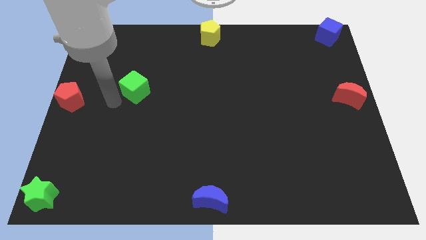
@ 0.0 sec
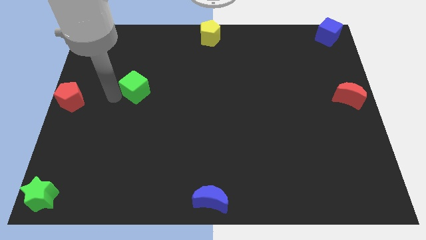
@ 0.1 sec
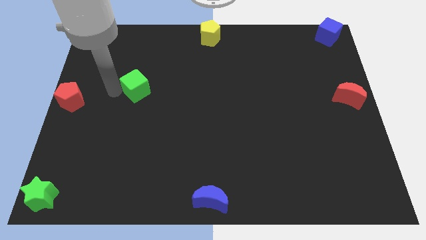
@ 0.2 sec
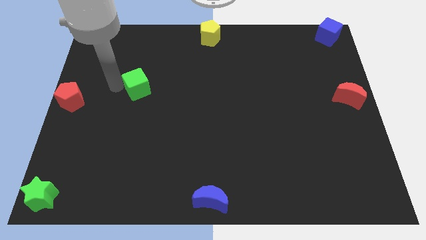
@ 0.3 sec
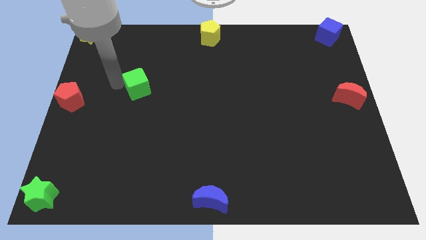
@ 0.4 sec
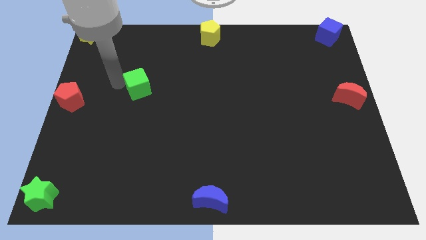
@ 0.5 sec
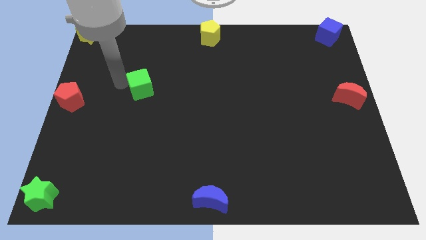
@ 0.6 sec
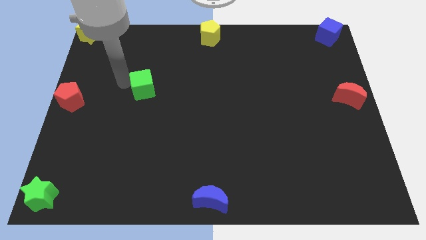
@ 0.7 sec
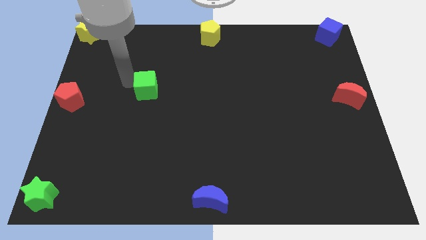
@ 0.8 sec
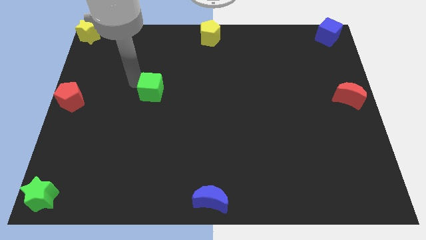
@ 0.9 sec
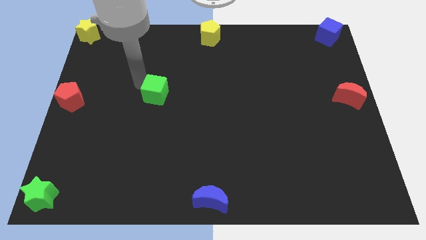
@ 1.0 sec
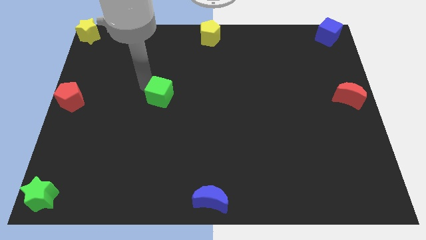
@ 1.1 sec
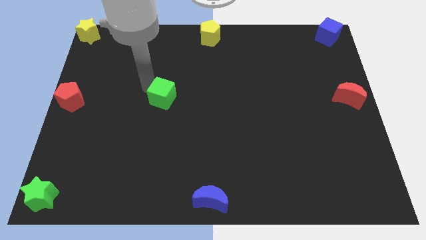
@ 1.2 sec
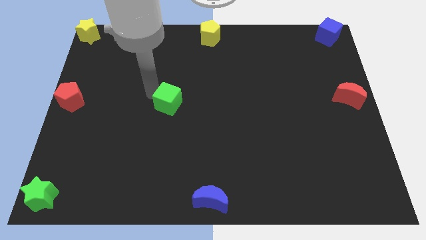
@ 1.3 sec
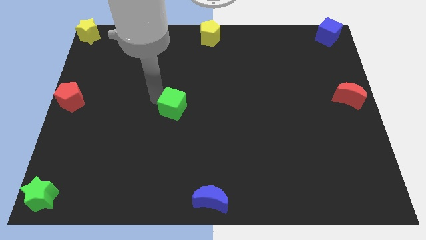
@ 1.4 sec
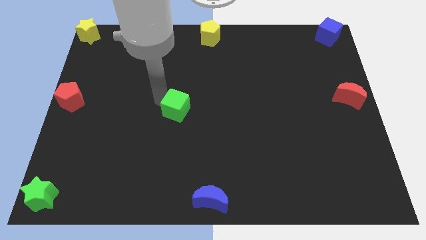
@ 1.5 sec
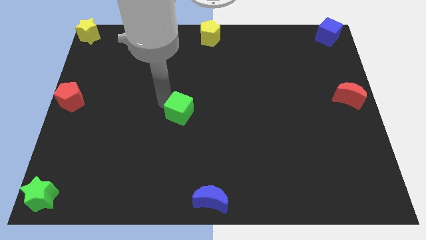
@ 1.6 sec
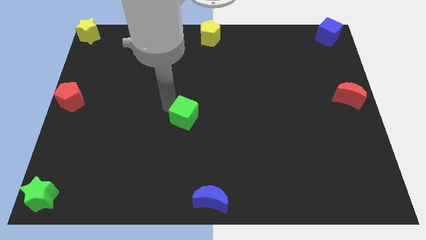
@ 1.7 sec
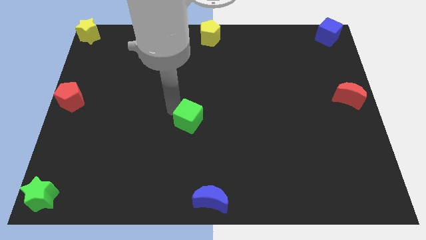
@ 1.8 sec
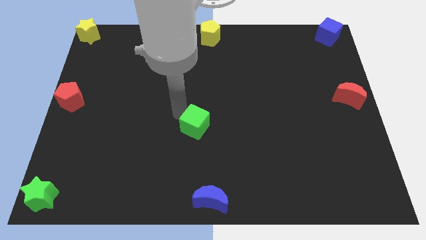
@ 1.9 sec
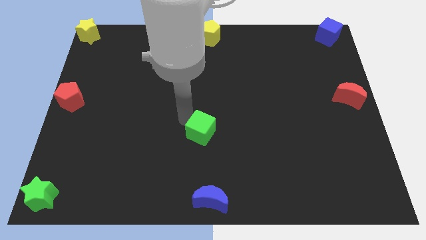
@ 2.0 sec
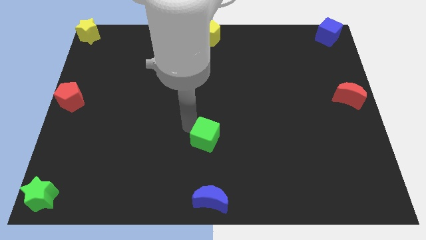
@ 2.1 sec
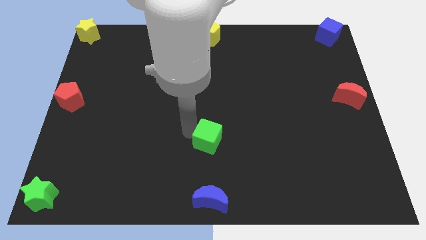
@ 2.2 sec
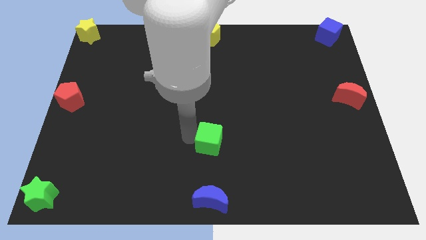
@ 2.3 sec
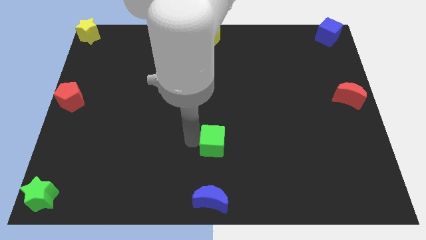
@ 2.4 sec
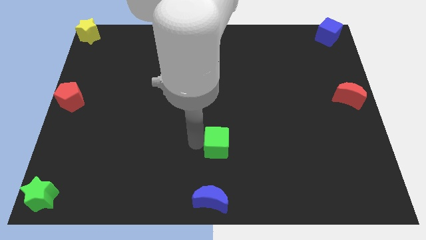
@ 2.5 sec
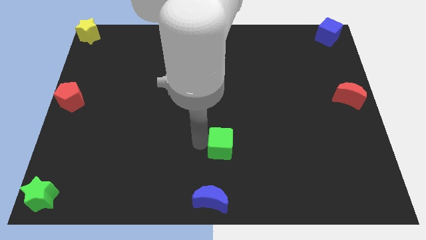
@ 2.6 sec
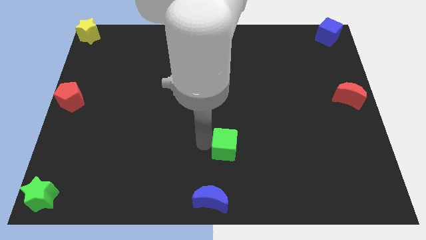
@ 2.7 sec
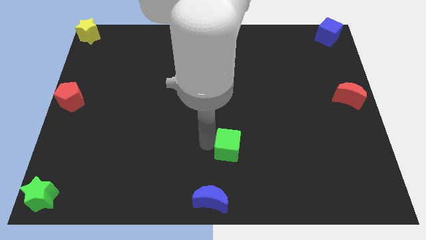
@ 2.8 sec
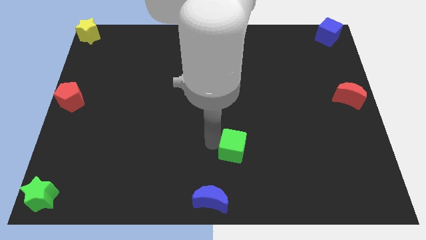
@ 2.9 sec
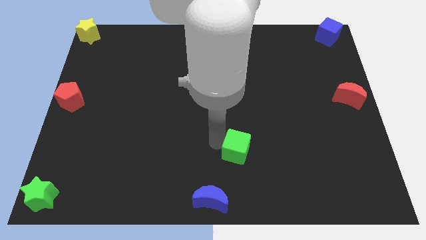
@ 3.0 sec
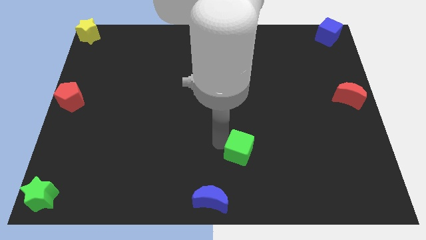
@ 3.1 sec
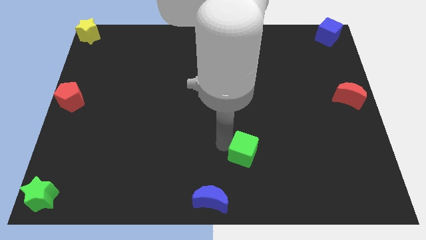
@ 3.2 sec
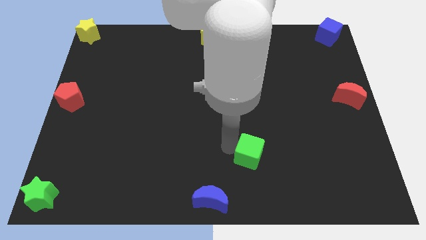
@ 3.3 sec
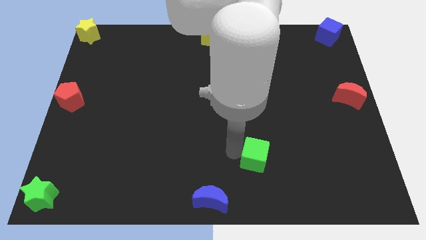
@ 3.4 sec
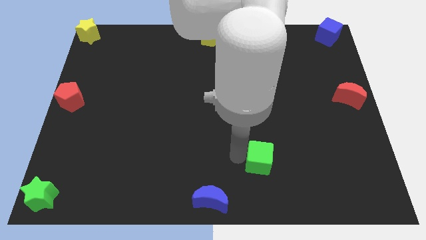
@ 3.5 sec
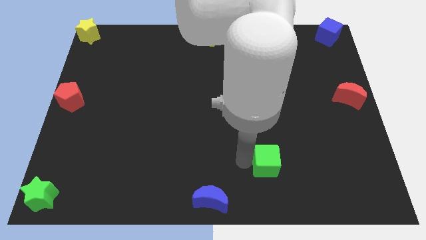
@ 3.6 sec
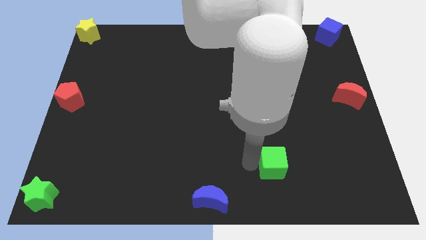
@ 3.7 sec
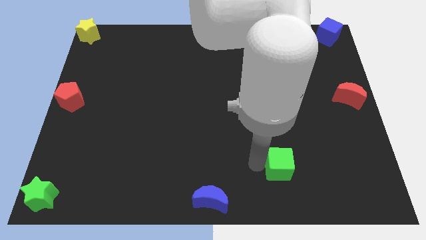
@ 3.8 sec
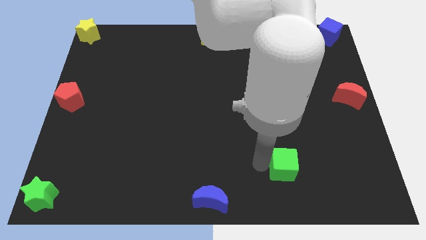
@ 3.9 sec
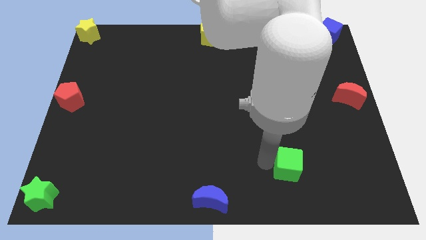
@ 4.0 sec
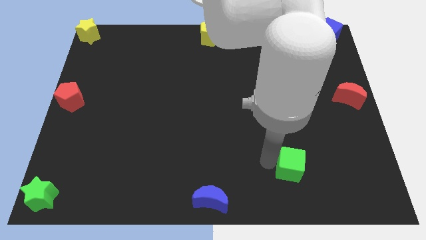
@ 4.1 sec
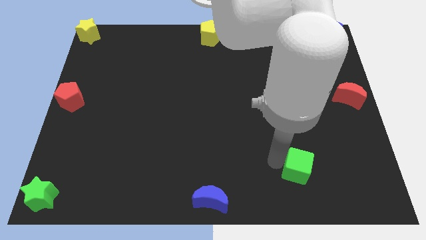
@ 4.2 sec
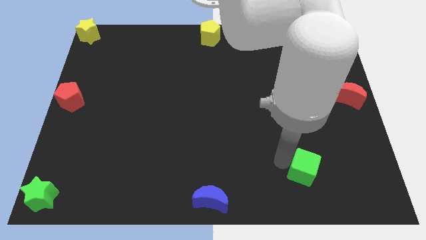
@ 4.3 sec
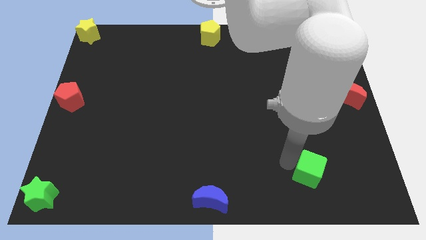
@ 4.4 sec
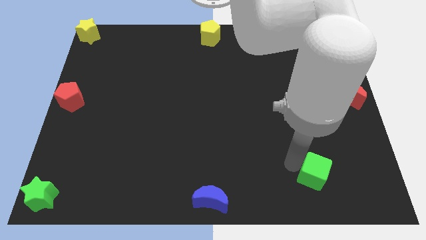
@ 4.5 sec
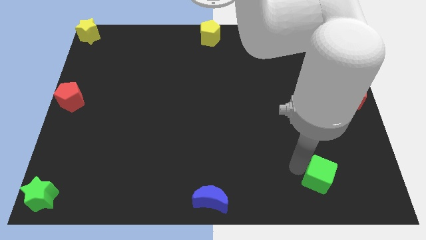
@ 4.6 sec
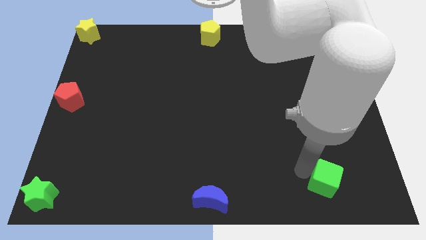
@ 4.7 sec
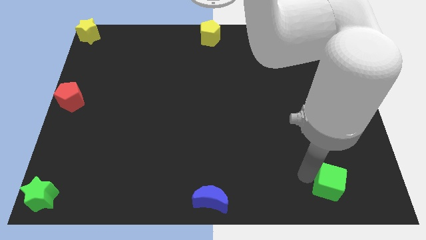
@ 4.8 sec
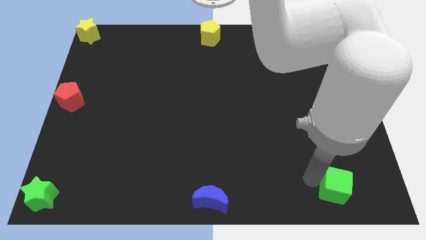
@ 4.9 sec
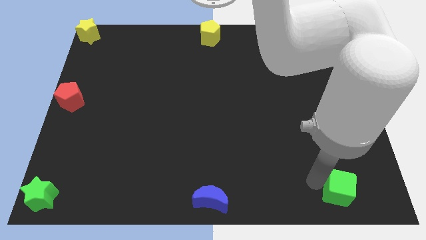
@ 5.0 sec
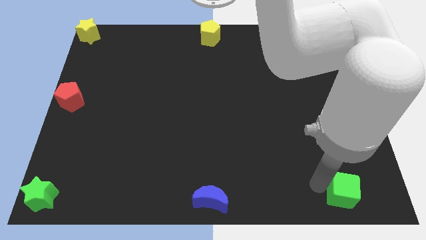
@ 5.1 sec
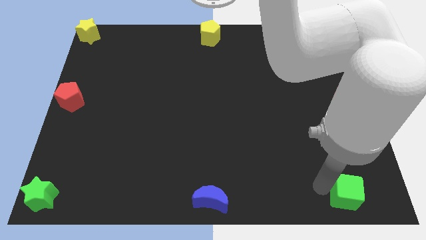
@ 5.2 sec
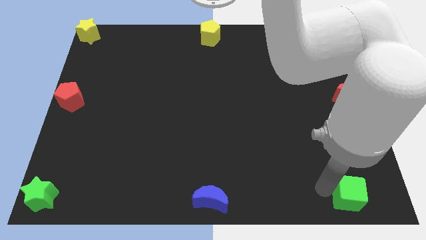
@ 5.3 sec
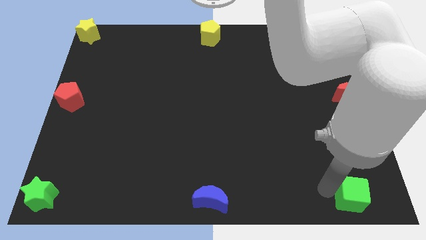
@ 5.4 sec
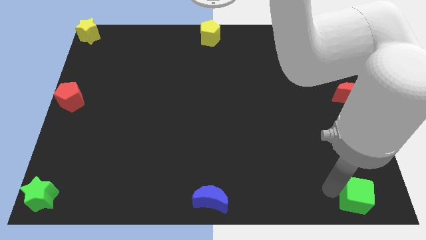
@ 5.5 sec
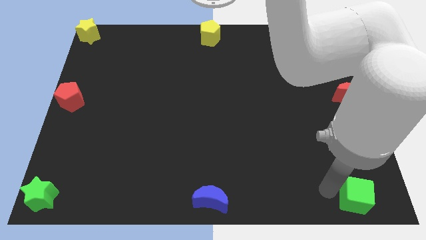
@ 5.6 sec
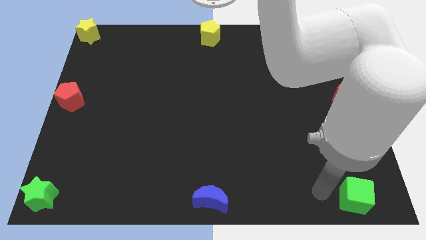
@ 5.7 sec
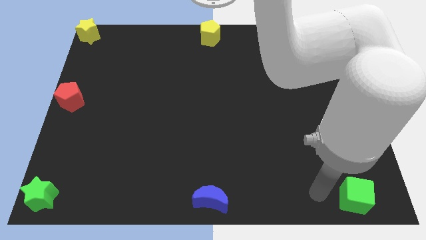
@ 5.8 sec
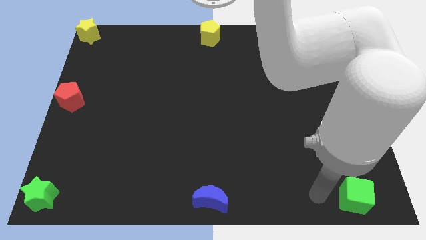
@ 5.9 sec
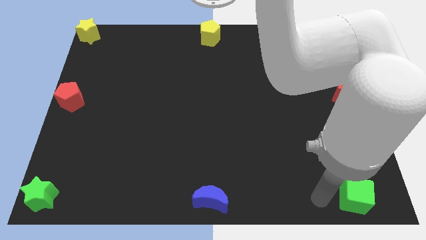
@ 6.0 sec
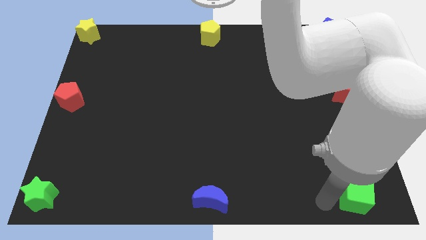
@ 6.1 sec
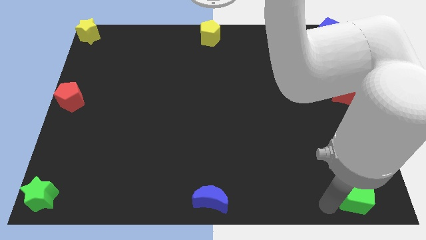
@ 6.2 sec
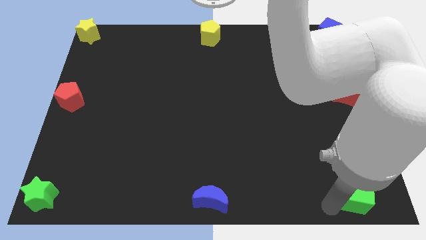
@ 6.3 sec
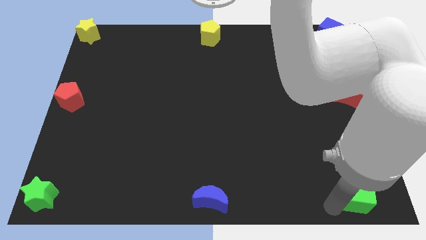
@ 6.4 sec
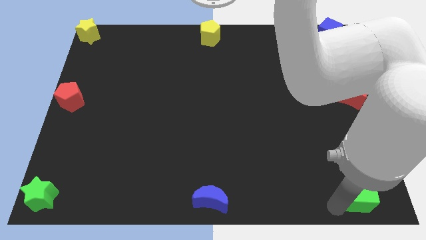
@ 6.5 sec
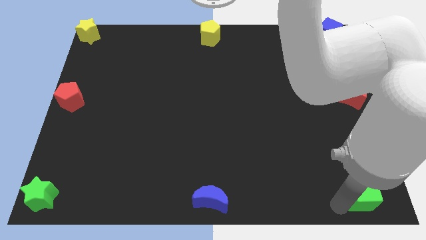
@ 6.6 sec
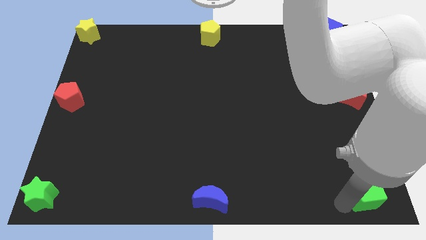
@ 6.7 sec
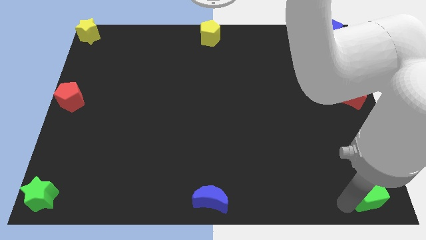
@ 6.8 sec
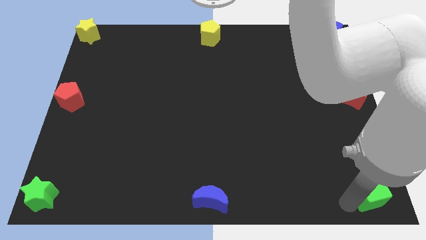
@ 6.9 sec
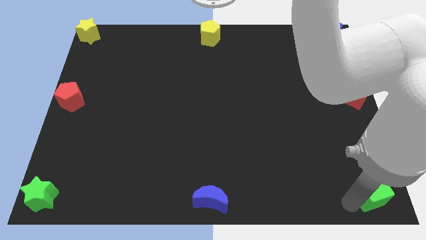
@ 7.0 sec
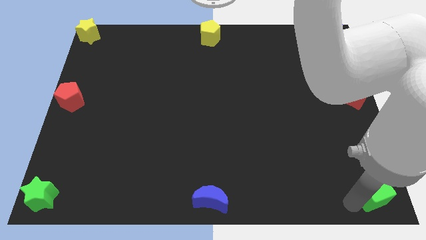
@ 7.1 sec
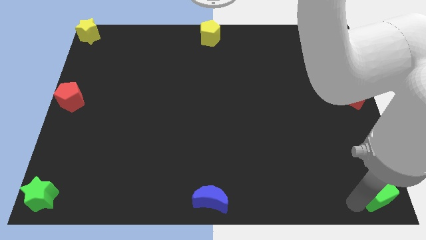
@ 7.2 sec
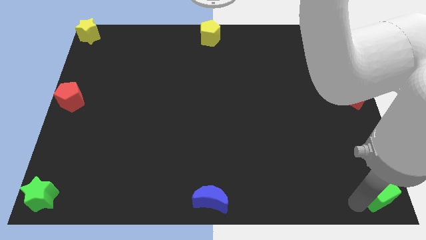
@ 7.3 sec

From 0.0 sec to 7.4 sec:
move the green cube to the bottom right corner of the board

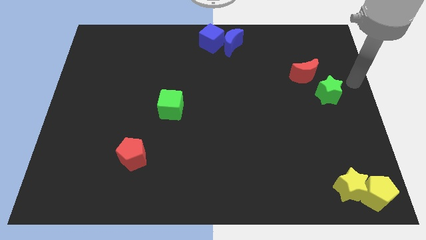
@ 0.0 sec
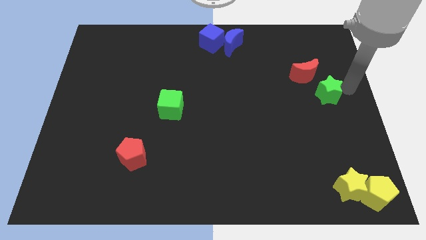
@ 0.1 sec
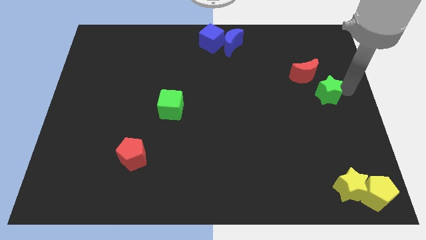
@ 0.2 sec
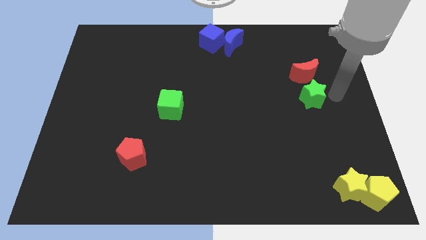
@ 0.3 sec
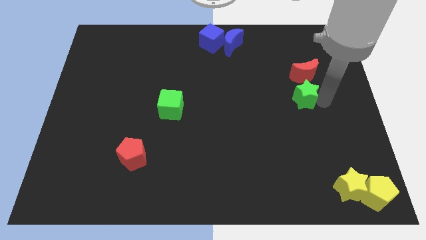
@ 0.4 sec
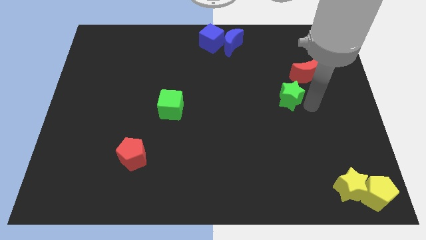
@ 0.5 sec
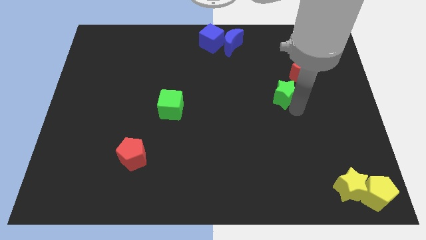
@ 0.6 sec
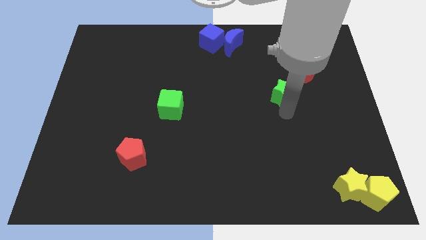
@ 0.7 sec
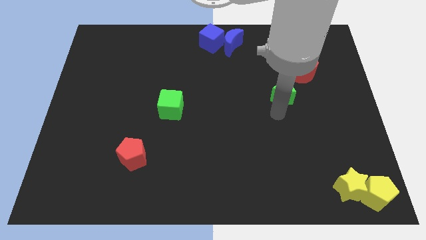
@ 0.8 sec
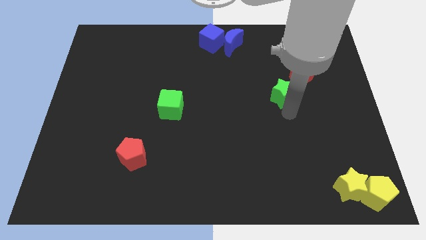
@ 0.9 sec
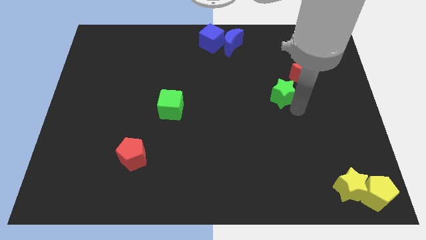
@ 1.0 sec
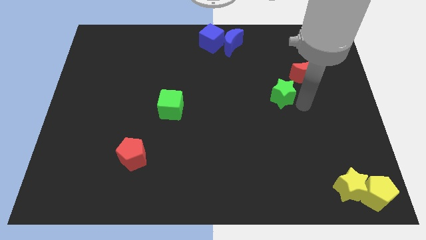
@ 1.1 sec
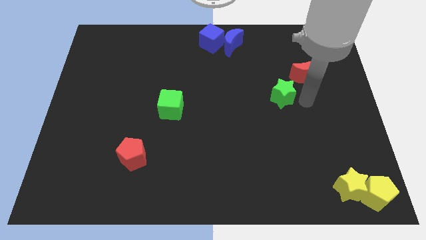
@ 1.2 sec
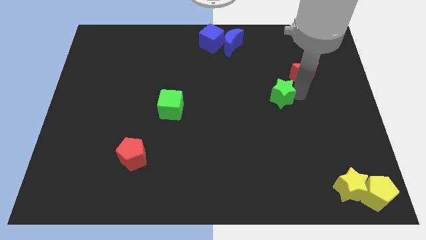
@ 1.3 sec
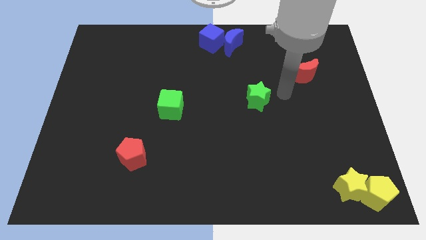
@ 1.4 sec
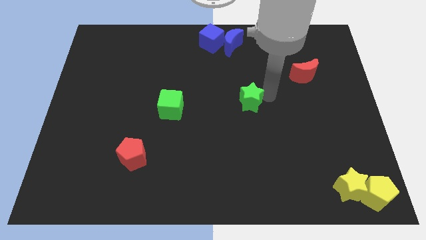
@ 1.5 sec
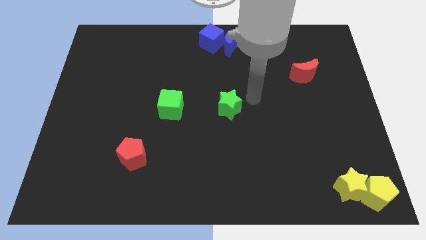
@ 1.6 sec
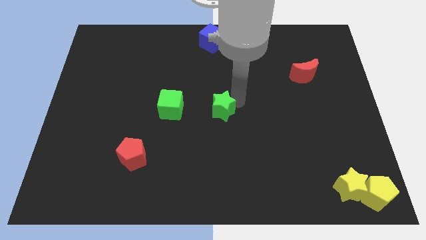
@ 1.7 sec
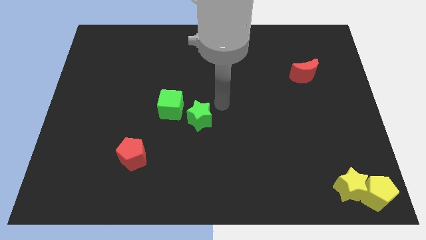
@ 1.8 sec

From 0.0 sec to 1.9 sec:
place green star parallel right to the green cube
